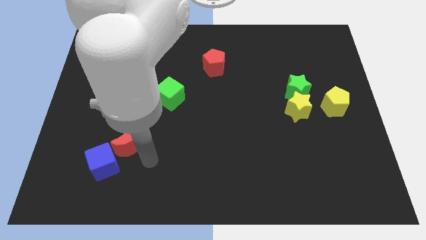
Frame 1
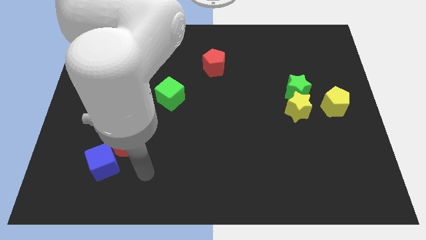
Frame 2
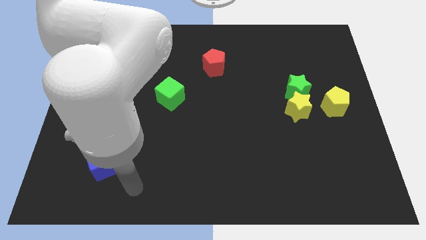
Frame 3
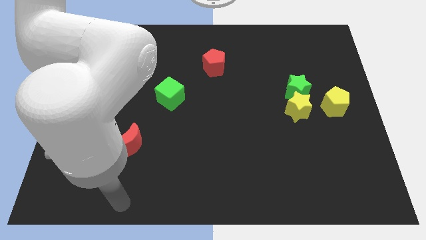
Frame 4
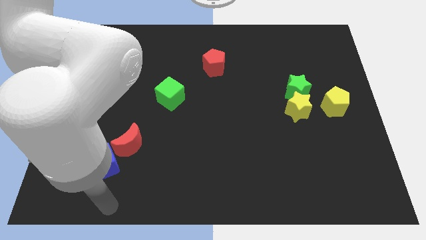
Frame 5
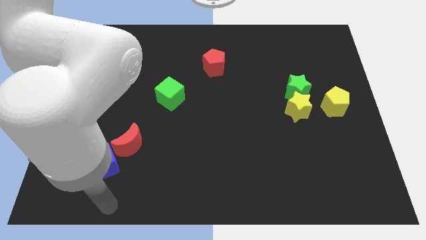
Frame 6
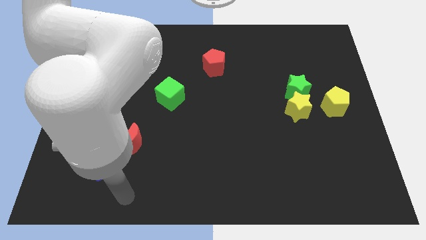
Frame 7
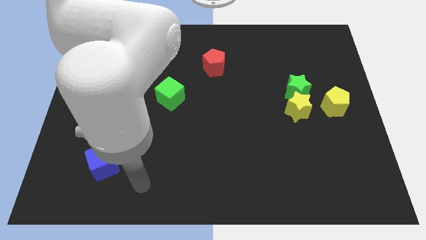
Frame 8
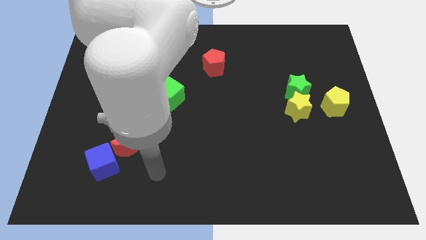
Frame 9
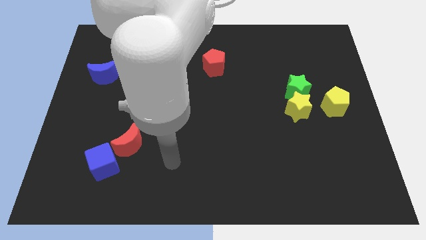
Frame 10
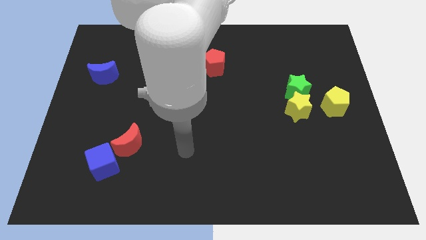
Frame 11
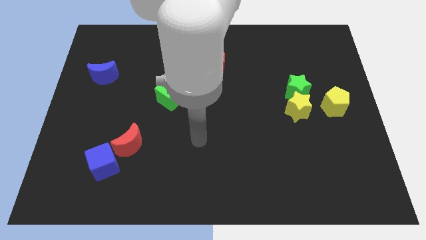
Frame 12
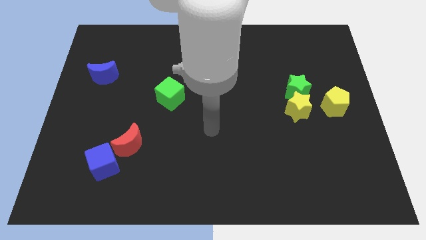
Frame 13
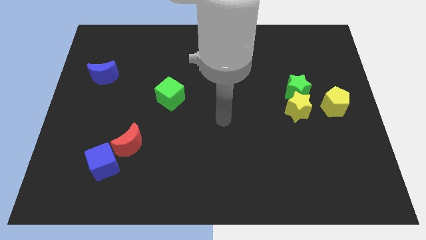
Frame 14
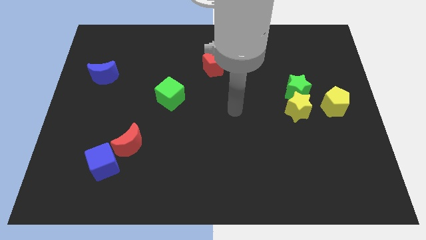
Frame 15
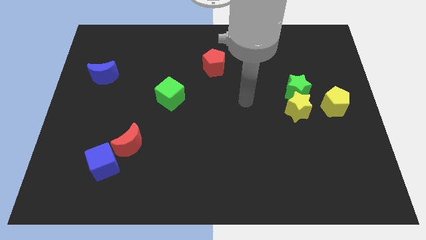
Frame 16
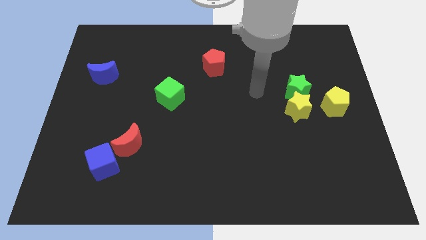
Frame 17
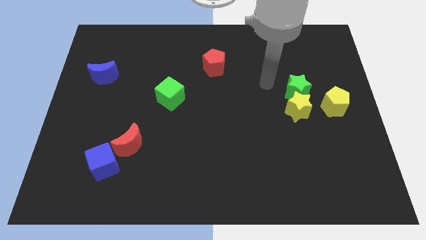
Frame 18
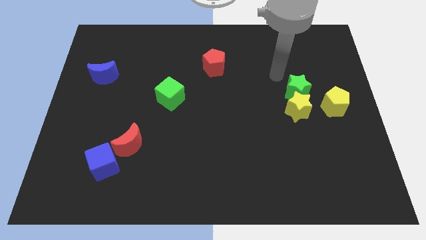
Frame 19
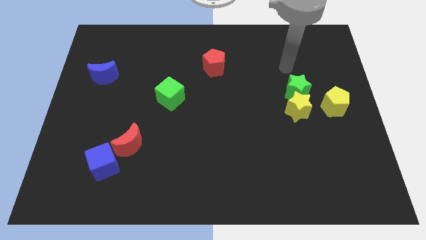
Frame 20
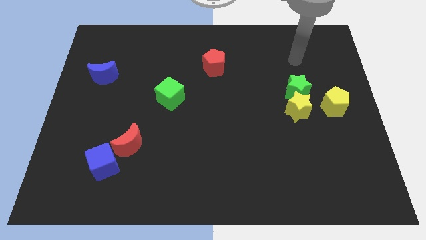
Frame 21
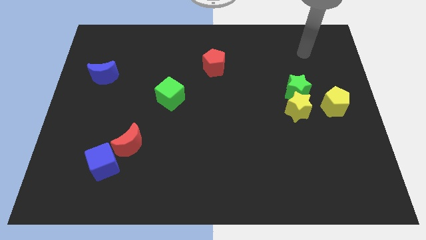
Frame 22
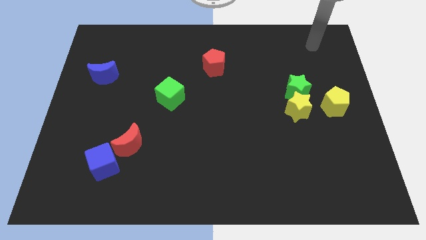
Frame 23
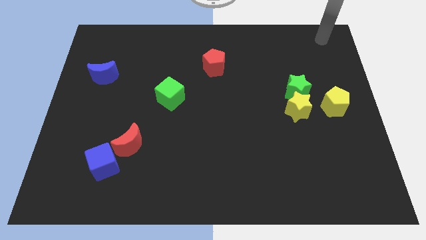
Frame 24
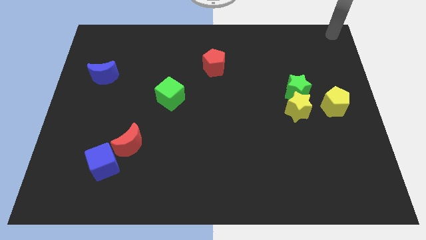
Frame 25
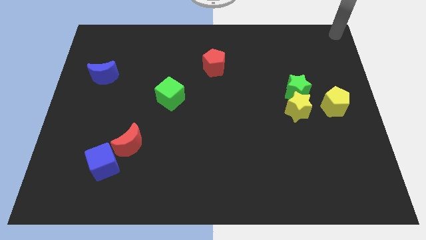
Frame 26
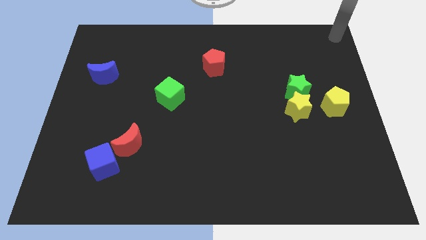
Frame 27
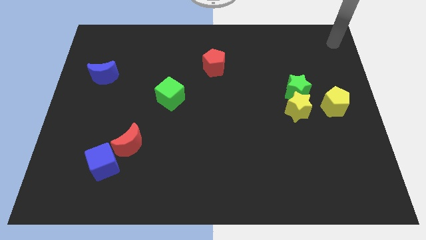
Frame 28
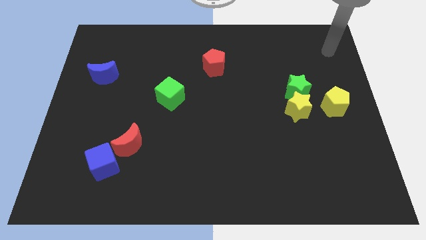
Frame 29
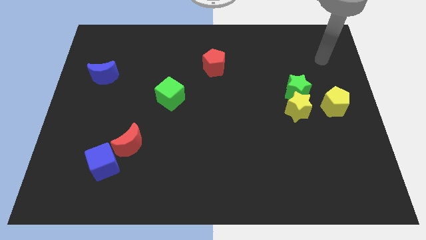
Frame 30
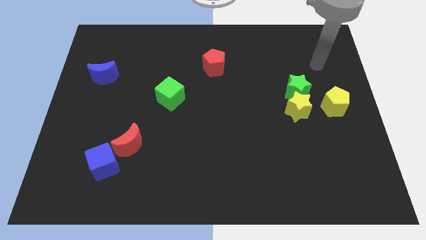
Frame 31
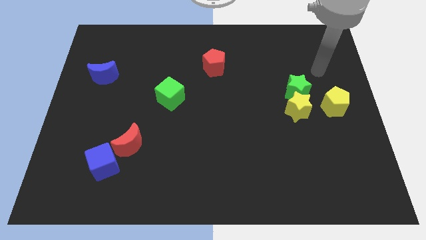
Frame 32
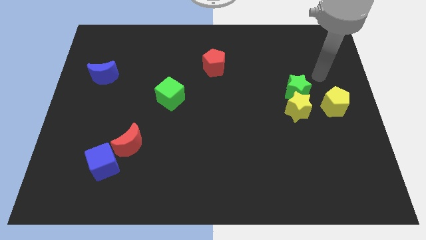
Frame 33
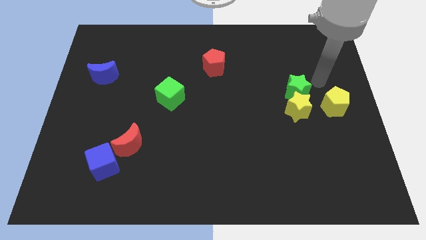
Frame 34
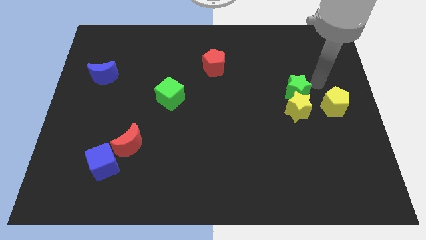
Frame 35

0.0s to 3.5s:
point the arm to the right of the green star

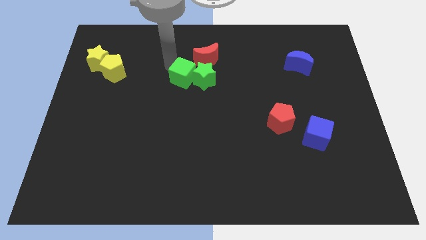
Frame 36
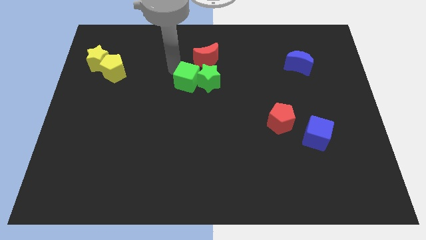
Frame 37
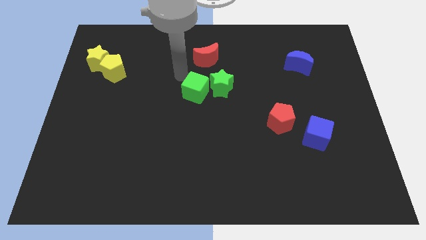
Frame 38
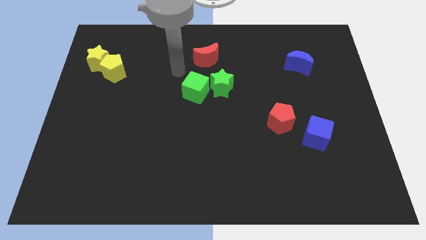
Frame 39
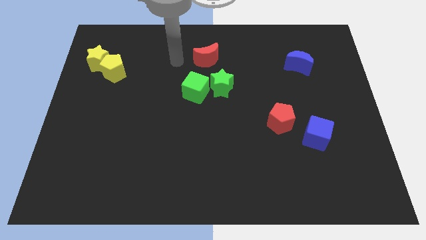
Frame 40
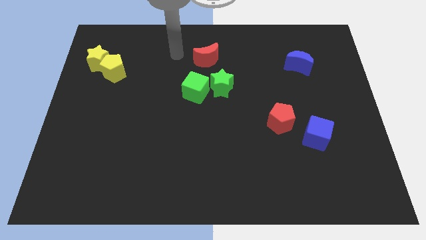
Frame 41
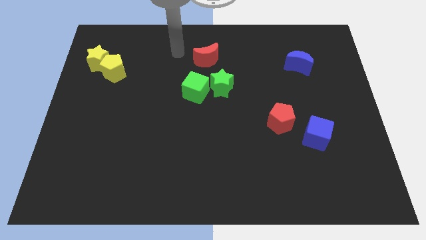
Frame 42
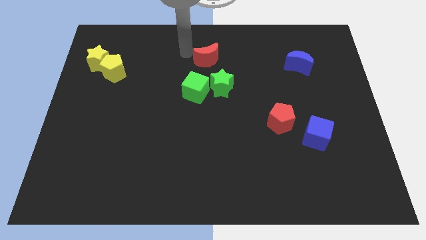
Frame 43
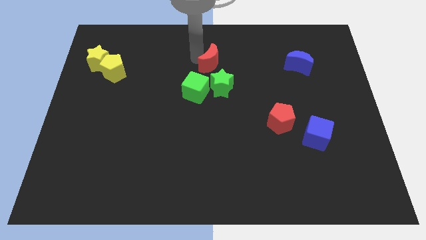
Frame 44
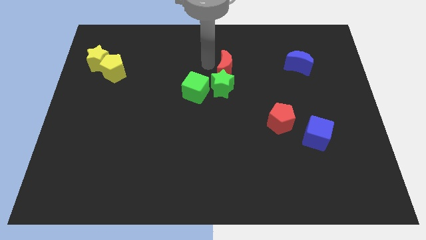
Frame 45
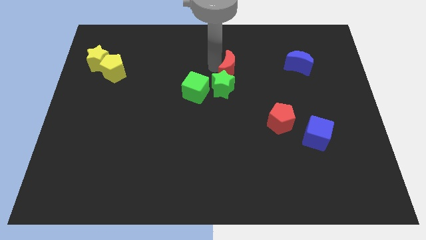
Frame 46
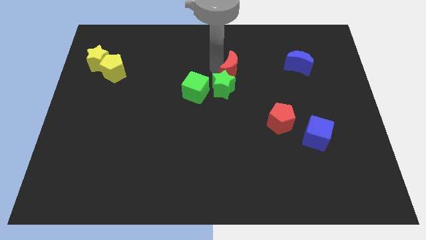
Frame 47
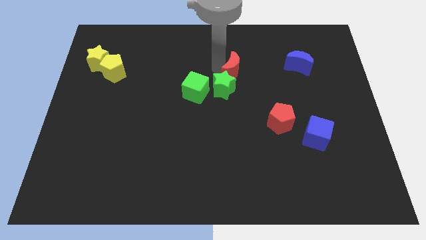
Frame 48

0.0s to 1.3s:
place the red moon above the green star

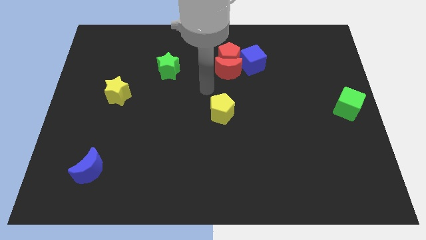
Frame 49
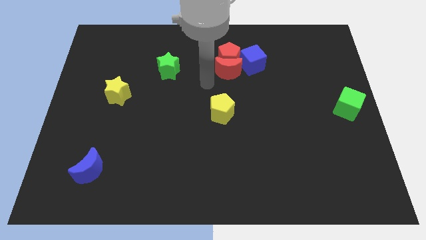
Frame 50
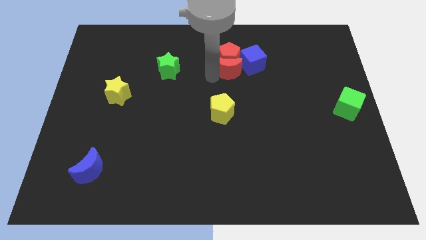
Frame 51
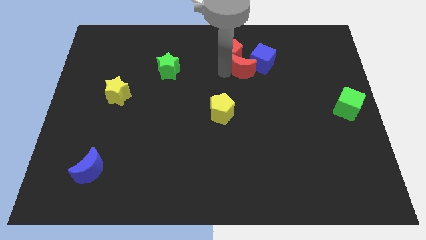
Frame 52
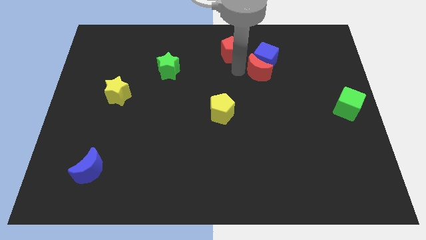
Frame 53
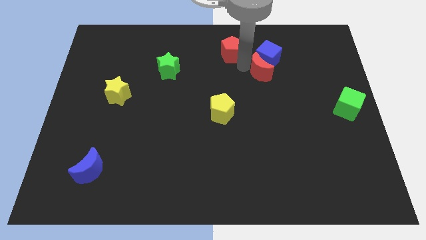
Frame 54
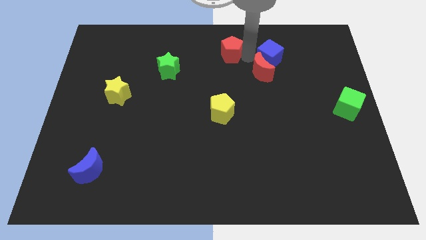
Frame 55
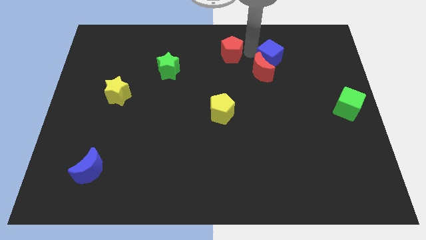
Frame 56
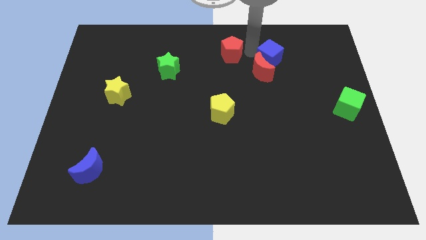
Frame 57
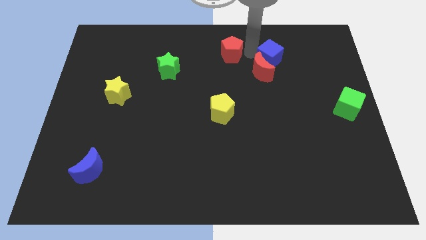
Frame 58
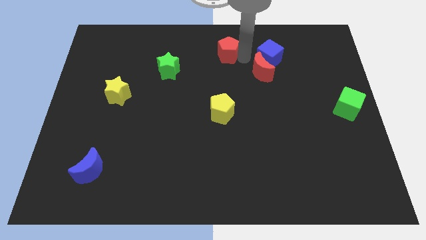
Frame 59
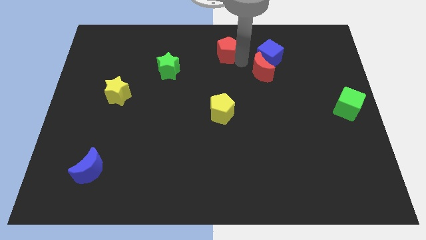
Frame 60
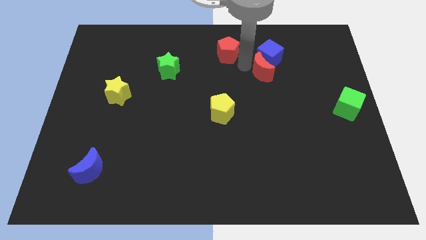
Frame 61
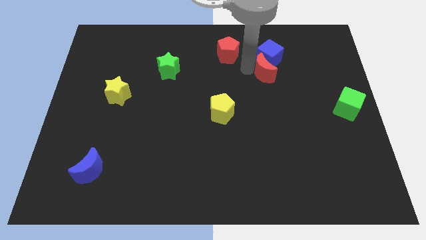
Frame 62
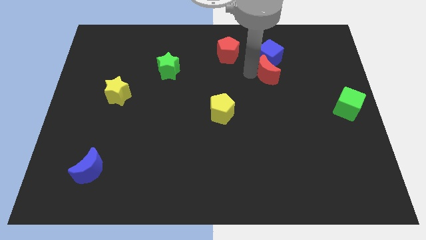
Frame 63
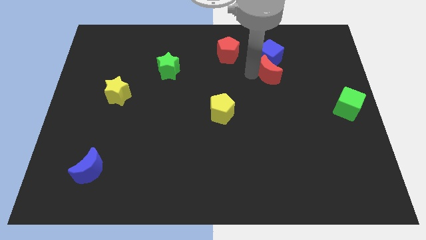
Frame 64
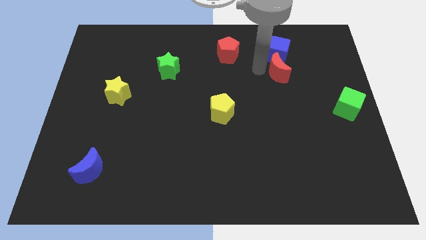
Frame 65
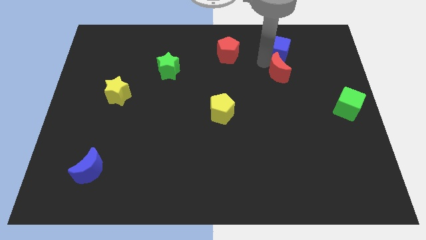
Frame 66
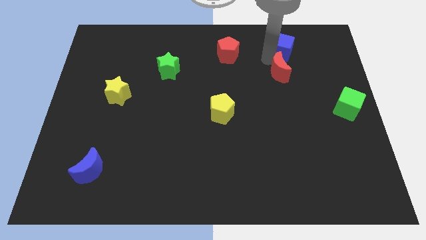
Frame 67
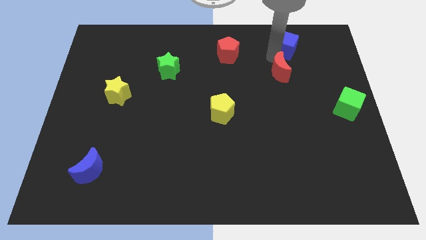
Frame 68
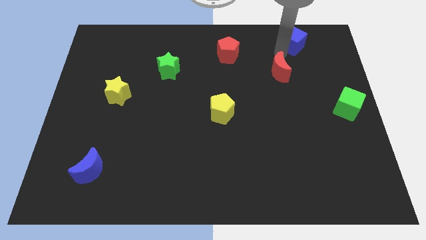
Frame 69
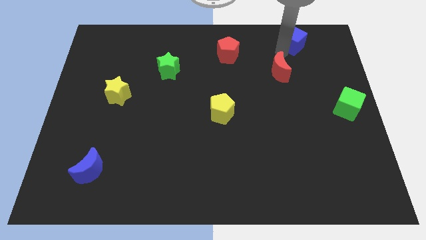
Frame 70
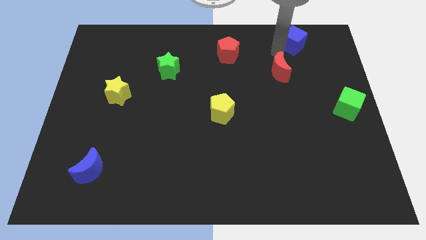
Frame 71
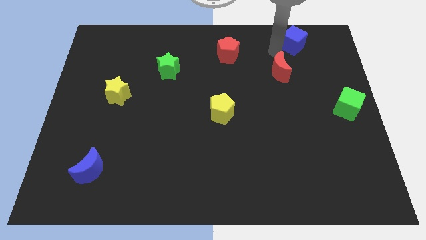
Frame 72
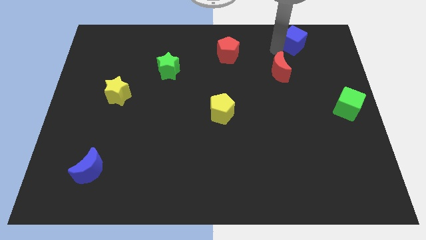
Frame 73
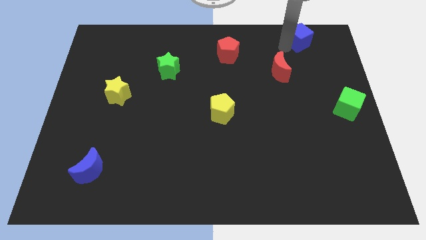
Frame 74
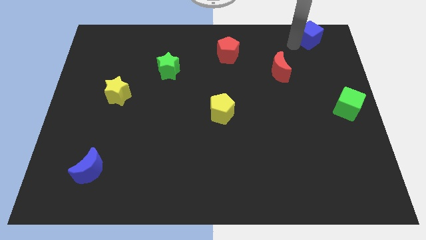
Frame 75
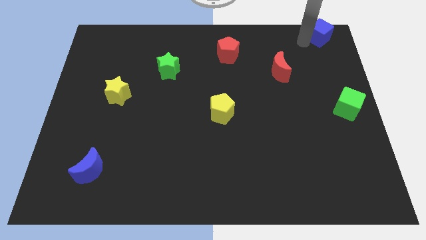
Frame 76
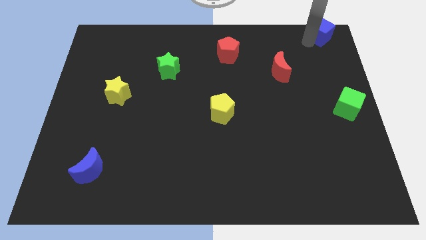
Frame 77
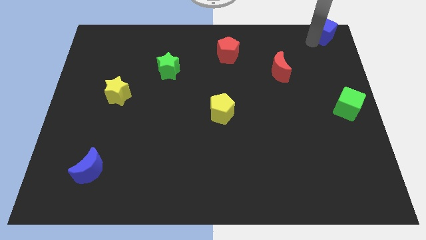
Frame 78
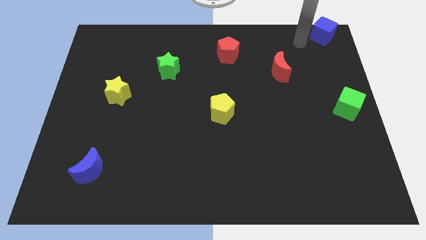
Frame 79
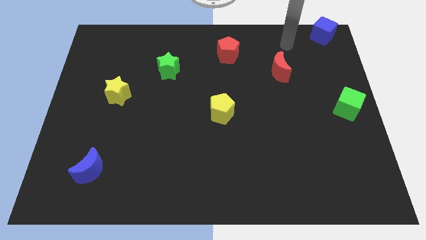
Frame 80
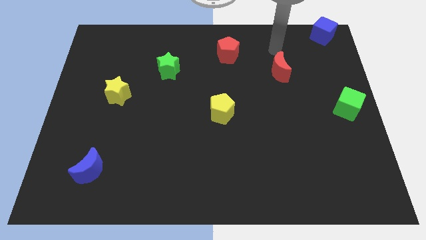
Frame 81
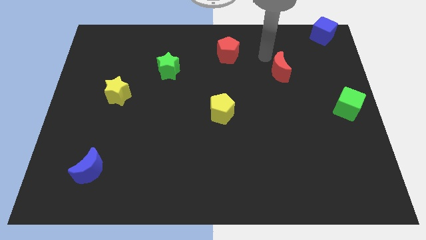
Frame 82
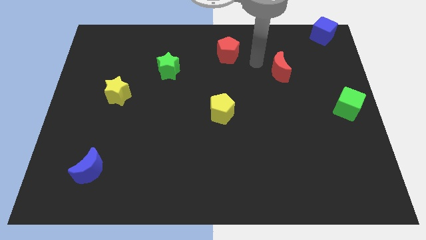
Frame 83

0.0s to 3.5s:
push the red crescent to the blue cube top right

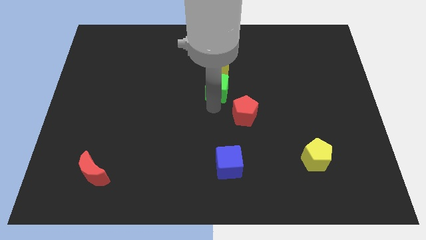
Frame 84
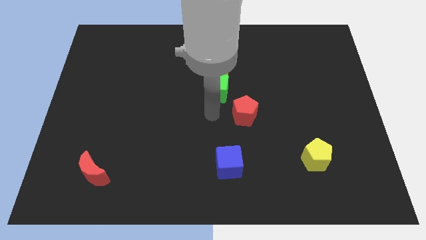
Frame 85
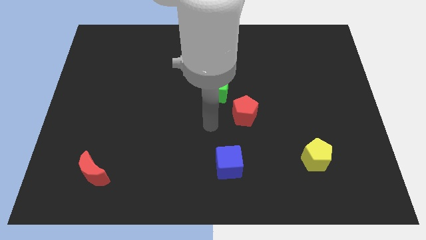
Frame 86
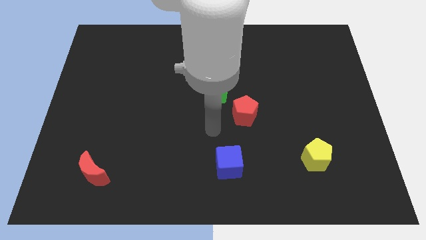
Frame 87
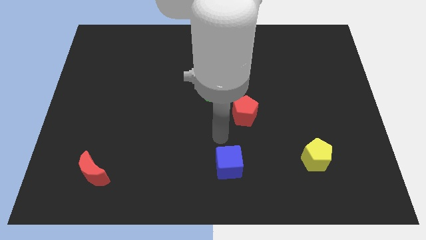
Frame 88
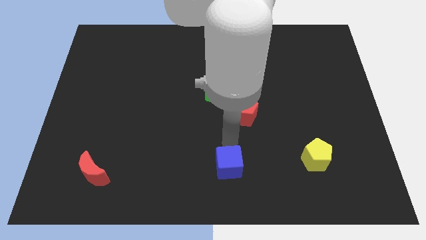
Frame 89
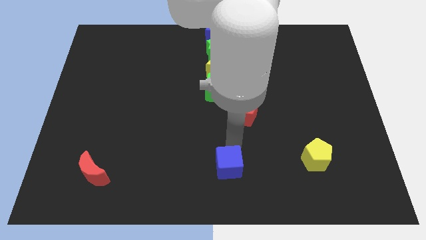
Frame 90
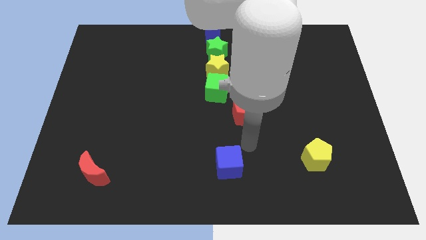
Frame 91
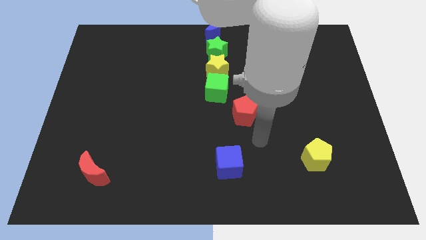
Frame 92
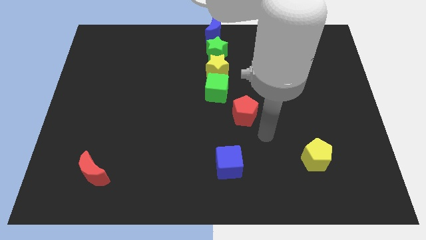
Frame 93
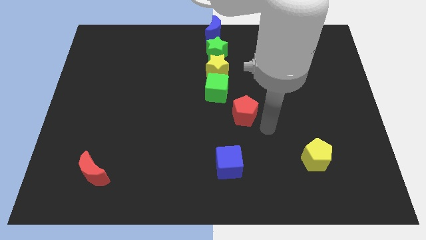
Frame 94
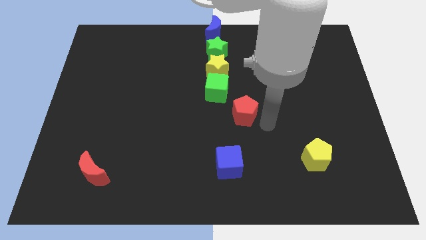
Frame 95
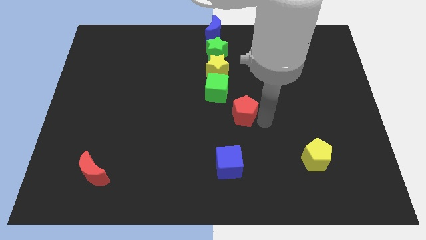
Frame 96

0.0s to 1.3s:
reposition the arm from left to right of the red pentagon
